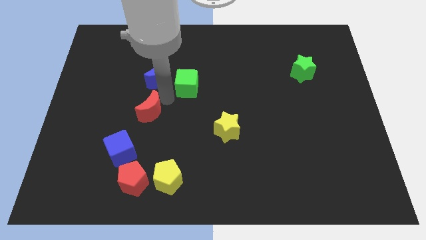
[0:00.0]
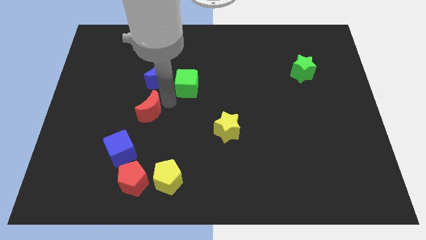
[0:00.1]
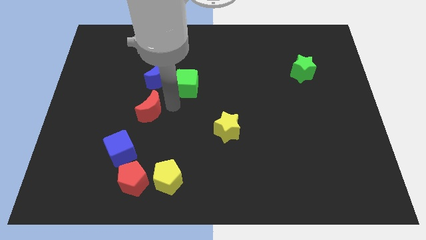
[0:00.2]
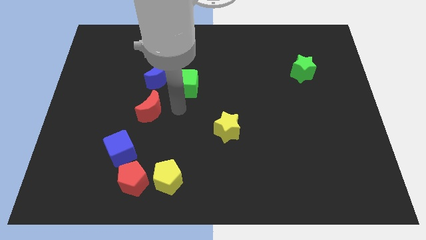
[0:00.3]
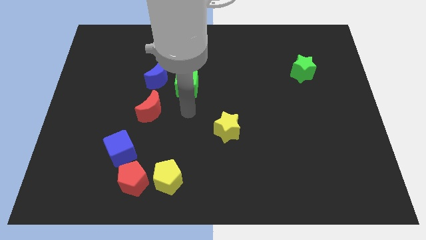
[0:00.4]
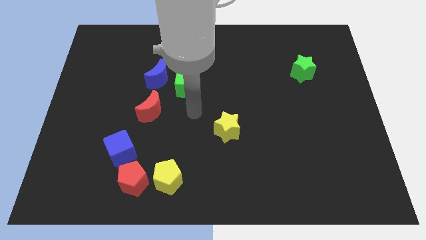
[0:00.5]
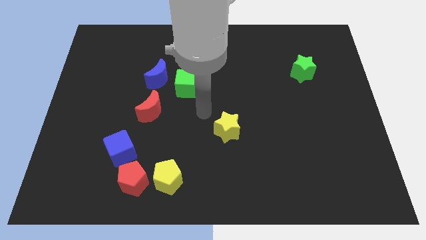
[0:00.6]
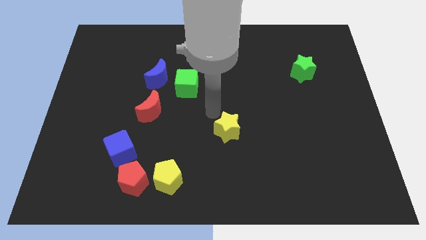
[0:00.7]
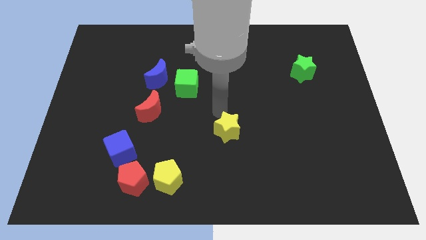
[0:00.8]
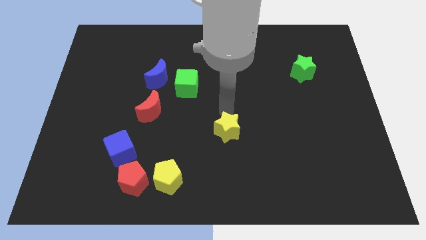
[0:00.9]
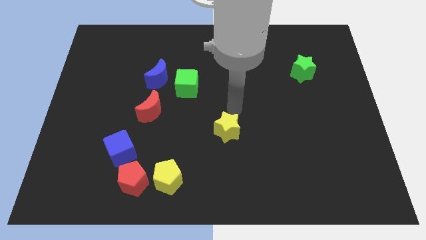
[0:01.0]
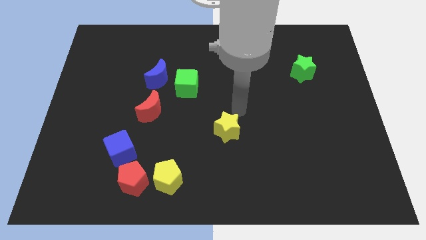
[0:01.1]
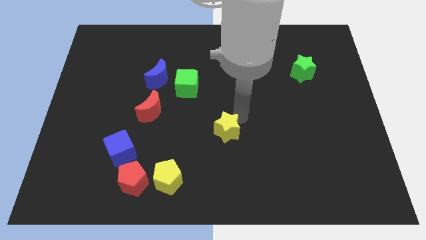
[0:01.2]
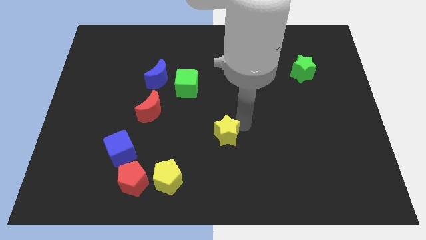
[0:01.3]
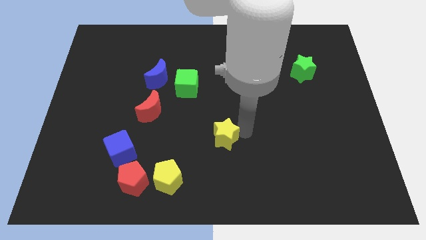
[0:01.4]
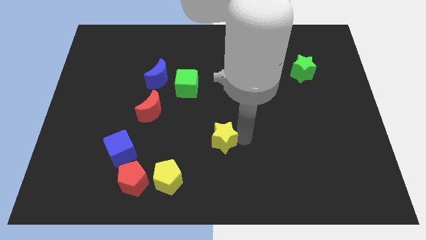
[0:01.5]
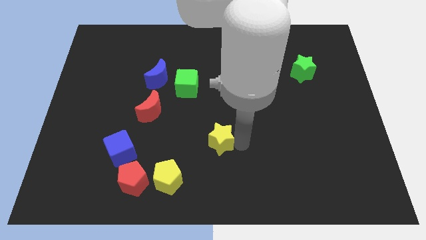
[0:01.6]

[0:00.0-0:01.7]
push yellow star

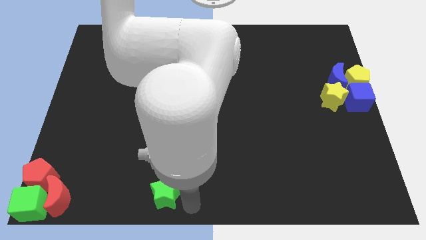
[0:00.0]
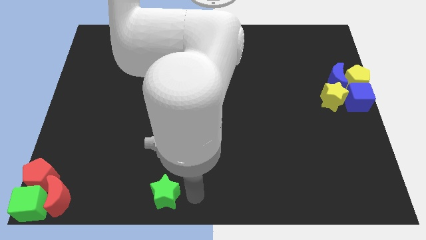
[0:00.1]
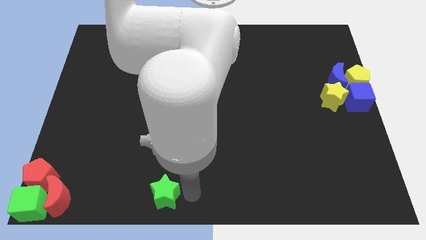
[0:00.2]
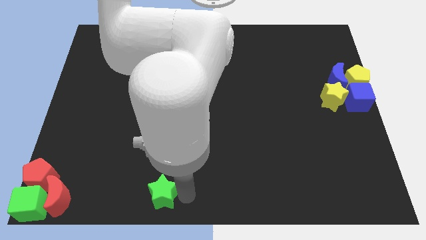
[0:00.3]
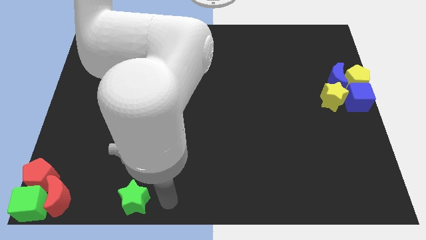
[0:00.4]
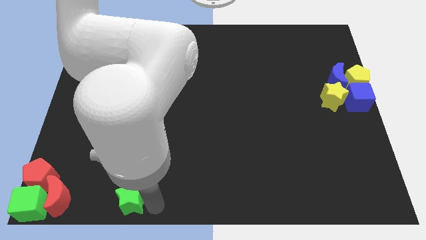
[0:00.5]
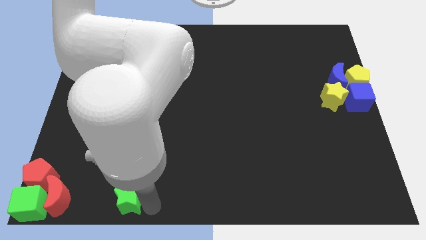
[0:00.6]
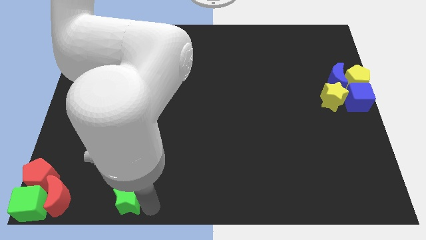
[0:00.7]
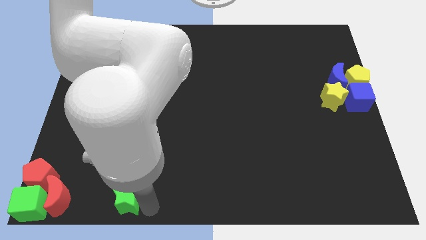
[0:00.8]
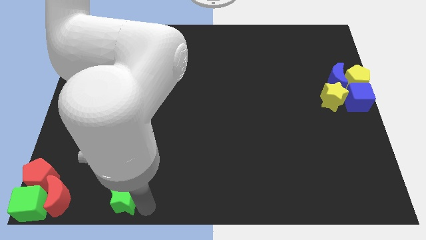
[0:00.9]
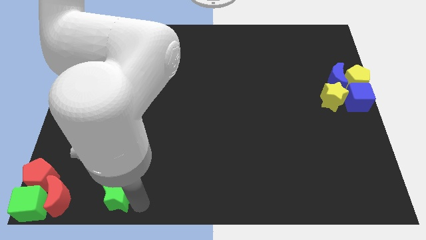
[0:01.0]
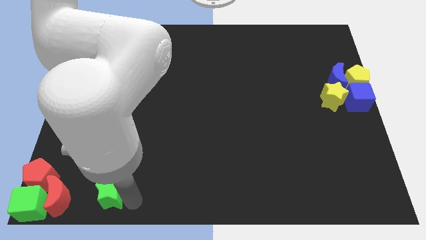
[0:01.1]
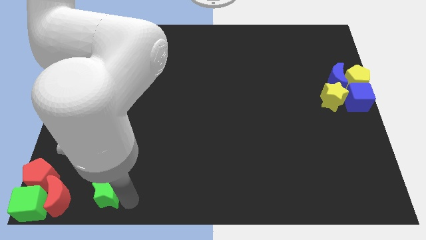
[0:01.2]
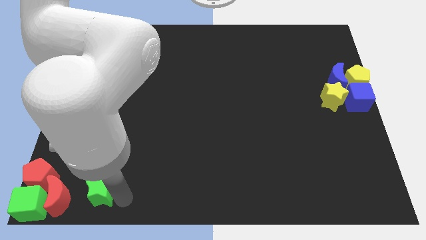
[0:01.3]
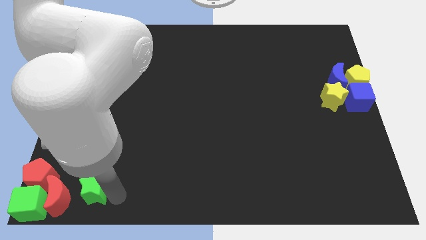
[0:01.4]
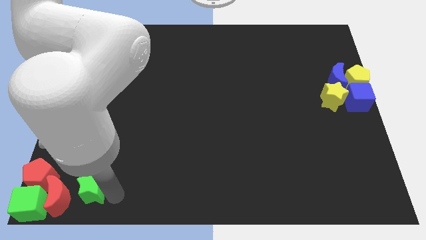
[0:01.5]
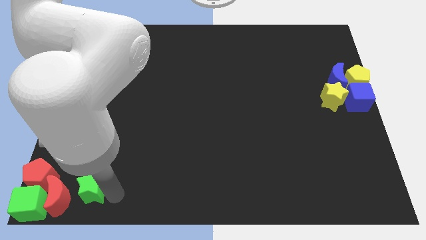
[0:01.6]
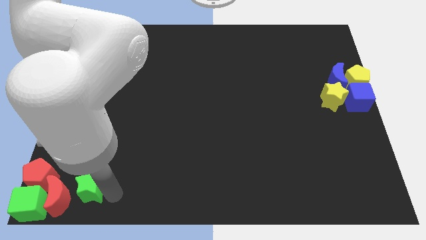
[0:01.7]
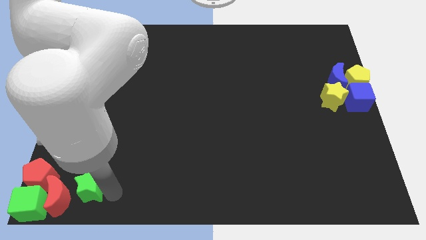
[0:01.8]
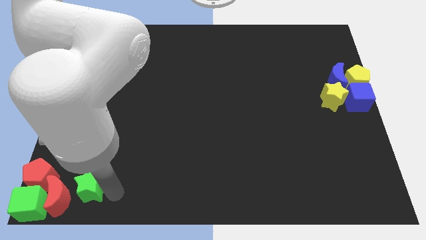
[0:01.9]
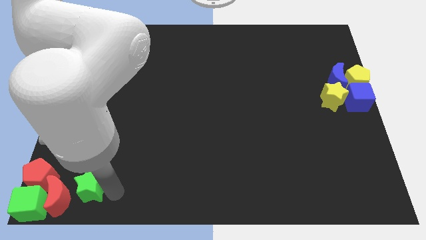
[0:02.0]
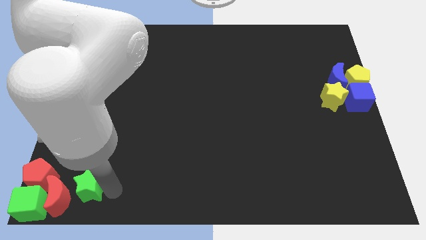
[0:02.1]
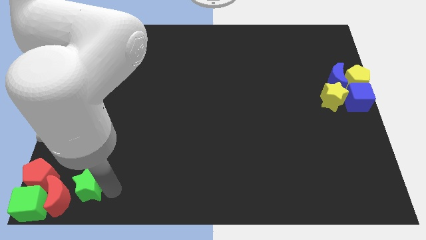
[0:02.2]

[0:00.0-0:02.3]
place the green star beside the red crescent

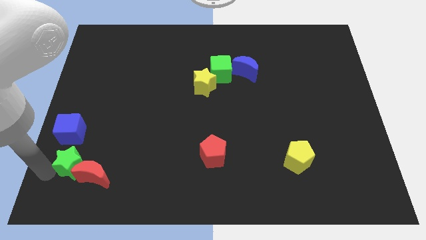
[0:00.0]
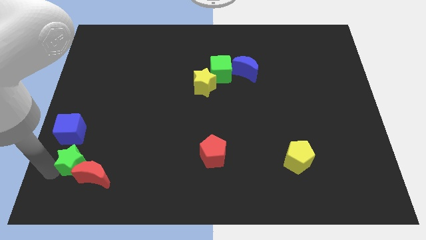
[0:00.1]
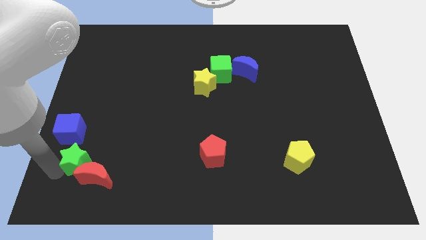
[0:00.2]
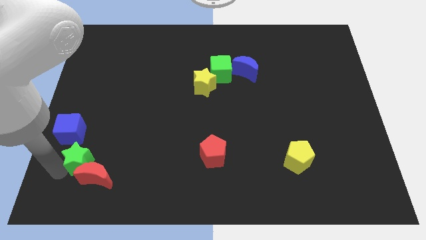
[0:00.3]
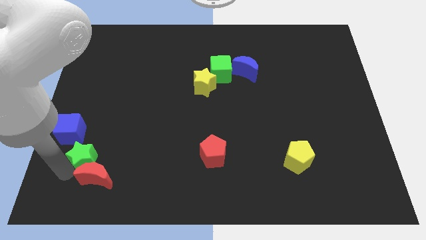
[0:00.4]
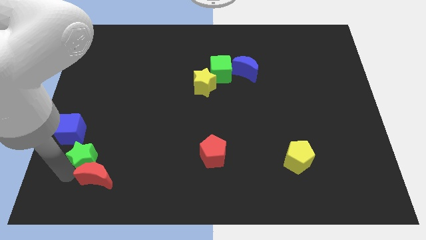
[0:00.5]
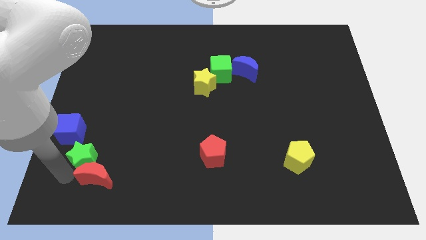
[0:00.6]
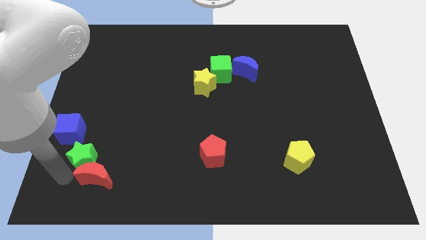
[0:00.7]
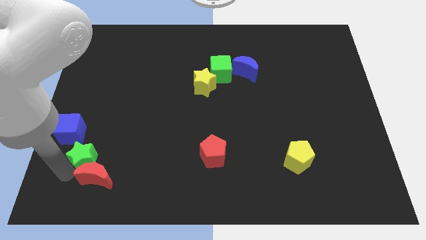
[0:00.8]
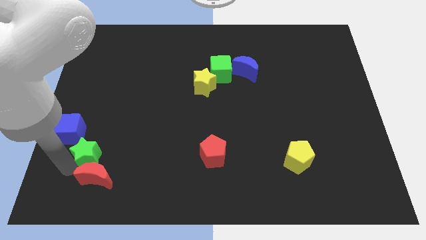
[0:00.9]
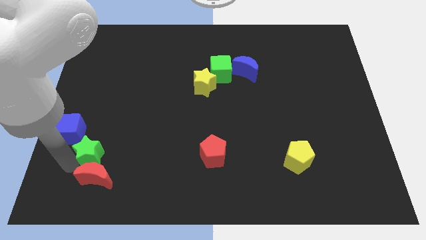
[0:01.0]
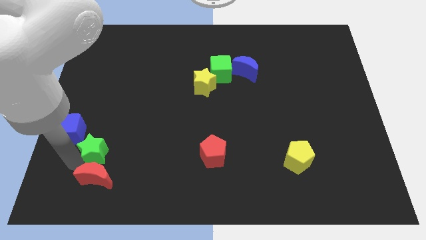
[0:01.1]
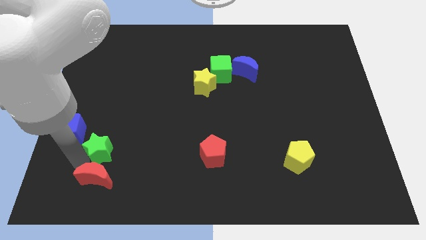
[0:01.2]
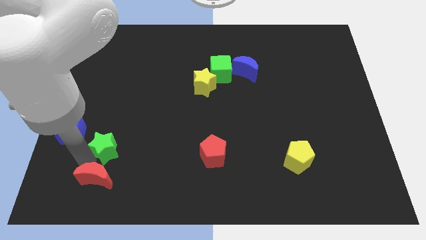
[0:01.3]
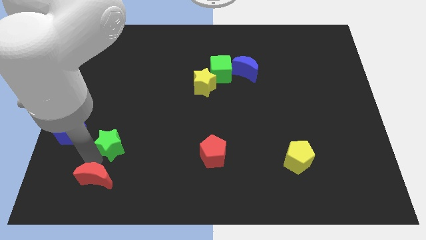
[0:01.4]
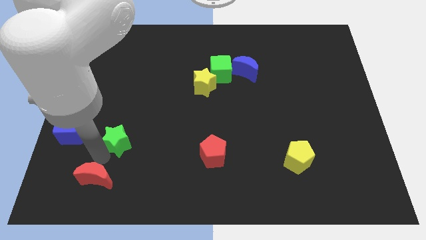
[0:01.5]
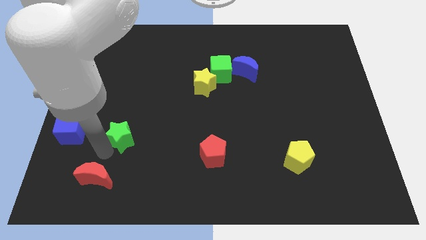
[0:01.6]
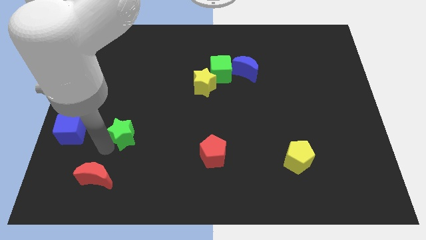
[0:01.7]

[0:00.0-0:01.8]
seaparate the green star from the left side of the red crescent

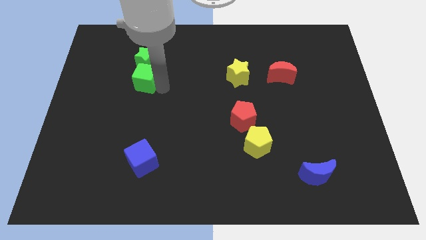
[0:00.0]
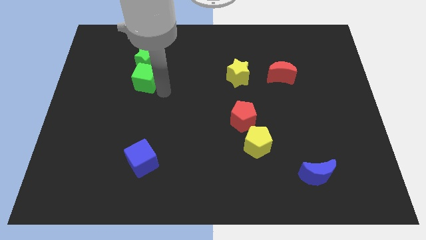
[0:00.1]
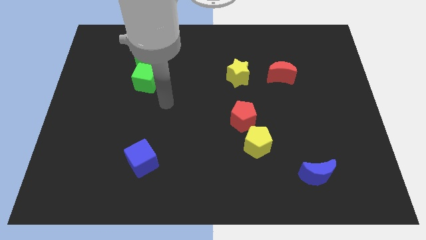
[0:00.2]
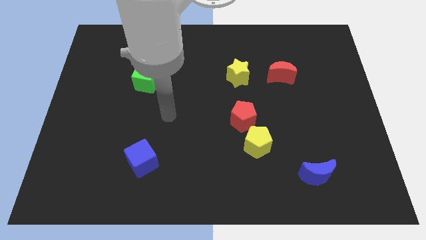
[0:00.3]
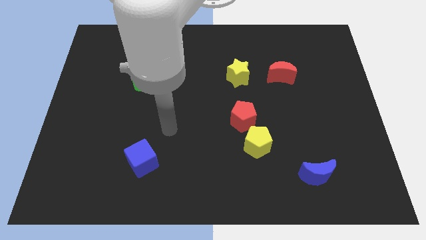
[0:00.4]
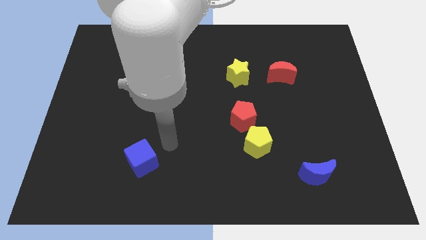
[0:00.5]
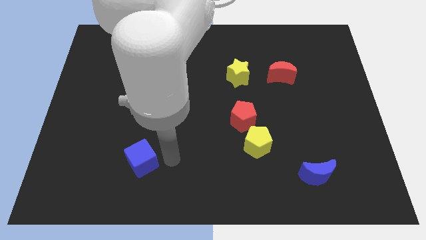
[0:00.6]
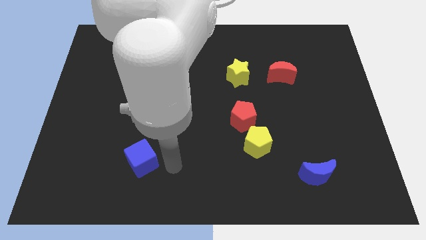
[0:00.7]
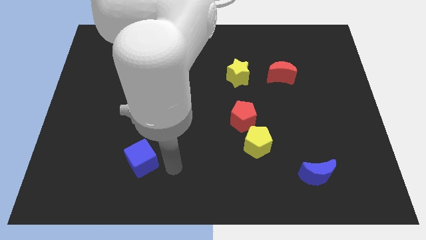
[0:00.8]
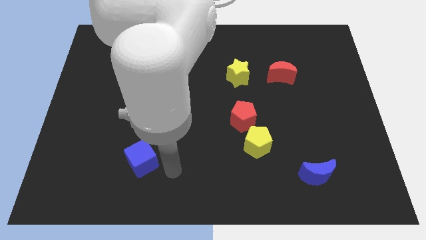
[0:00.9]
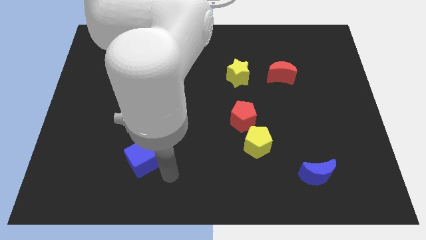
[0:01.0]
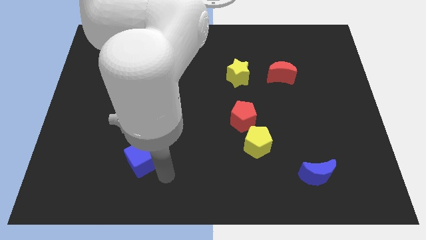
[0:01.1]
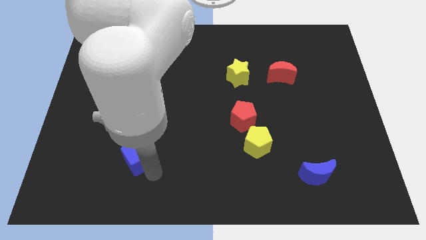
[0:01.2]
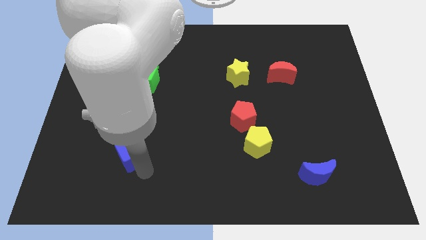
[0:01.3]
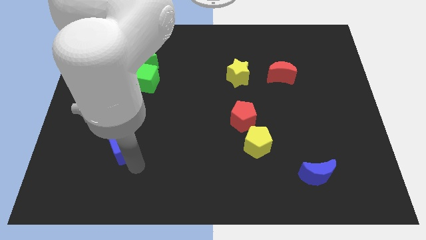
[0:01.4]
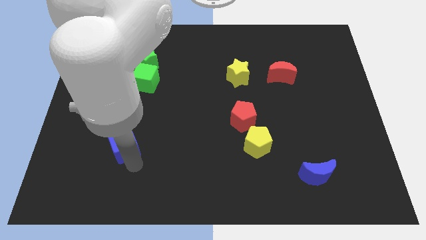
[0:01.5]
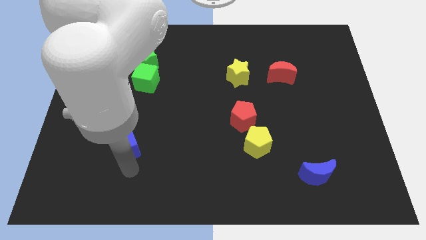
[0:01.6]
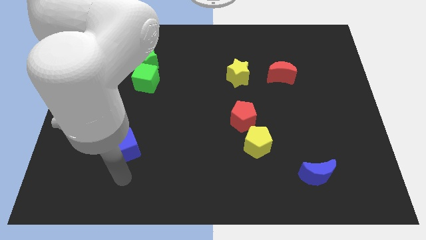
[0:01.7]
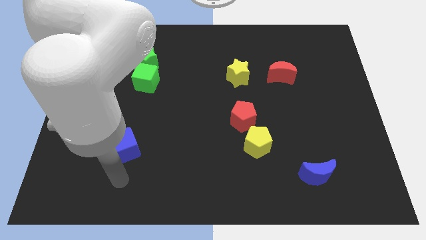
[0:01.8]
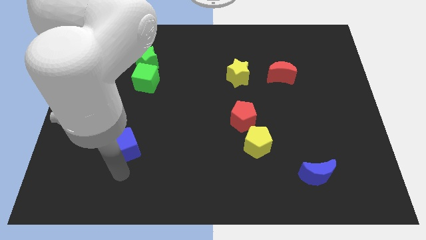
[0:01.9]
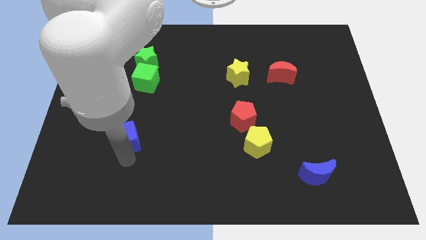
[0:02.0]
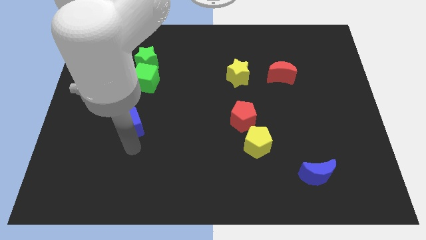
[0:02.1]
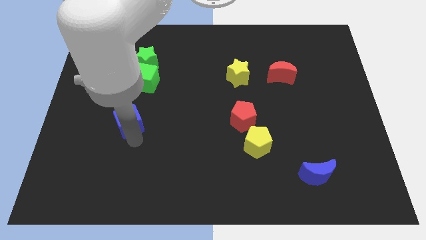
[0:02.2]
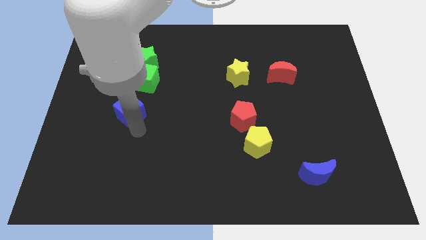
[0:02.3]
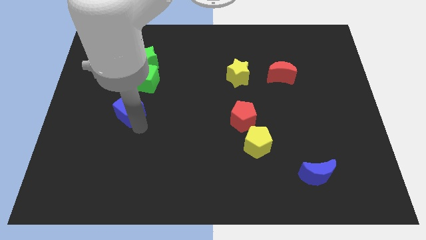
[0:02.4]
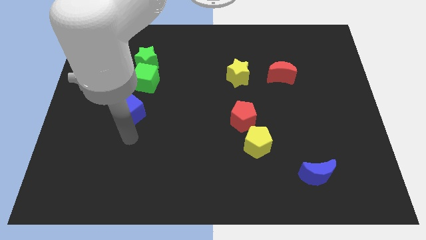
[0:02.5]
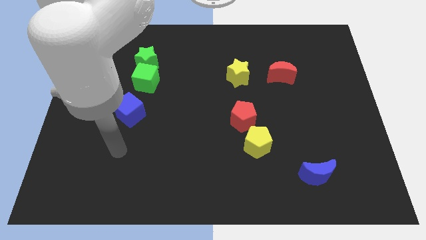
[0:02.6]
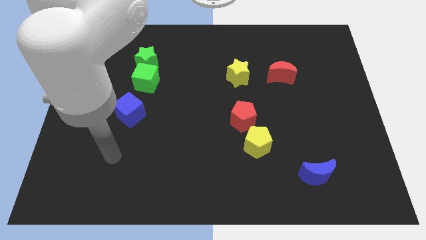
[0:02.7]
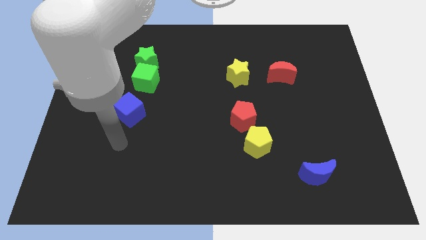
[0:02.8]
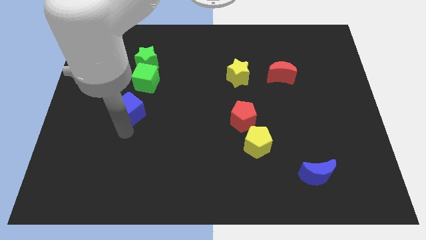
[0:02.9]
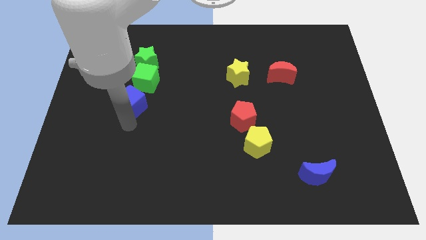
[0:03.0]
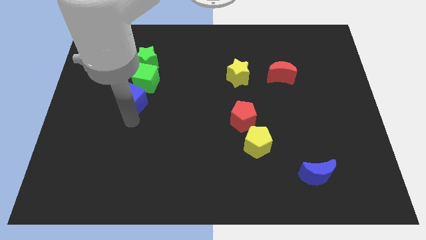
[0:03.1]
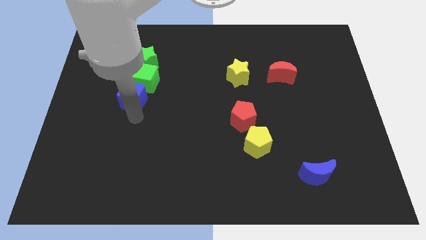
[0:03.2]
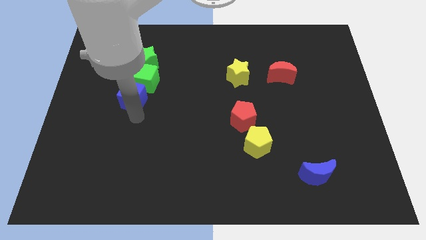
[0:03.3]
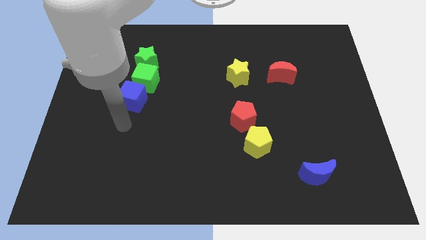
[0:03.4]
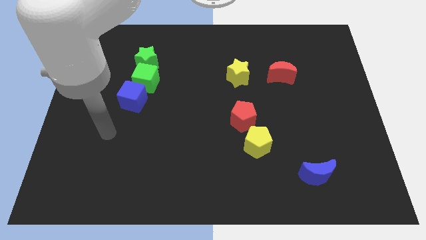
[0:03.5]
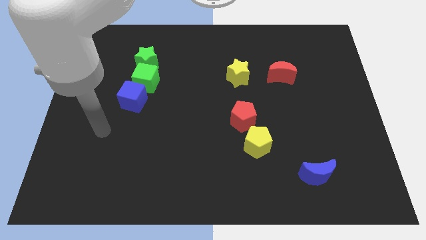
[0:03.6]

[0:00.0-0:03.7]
move the blue cube close to the bottom side of the green cube
